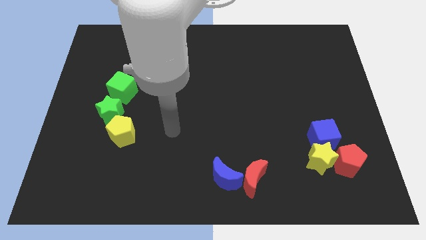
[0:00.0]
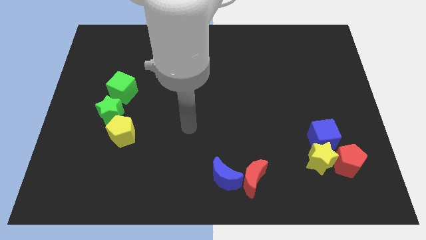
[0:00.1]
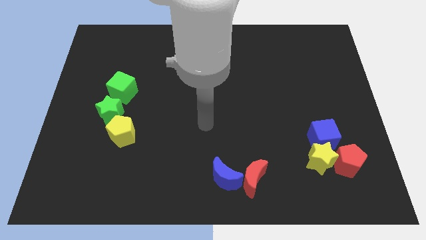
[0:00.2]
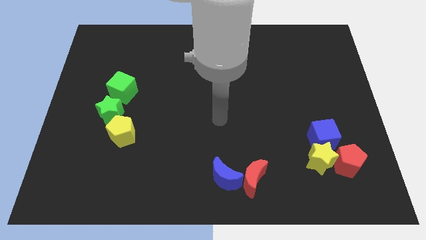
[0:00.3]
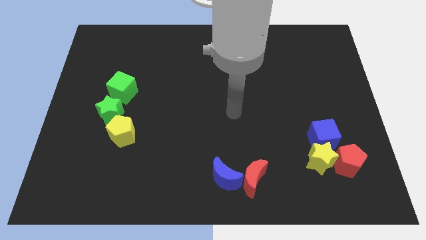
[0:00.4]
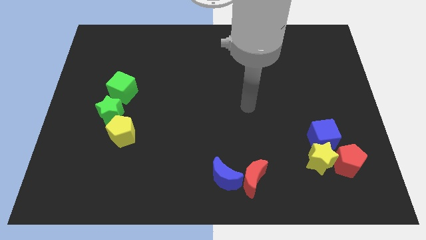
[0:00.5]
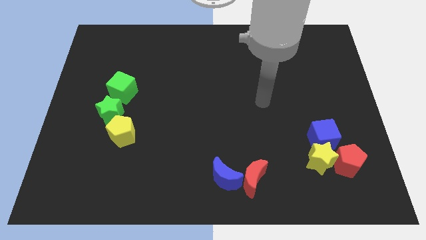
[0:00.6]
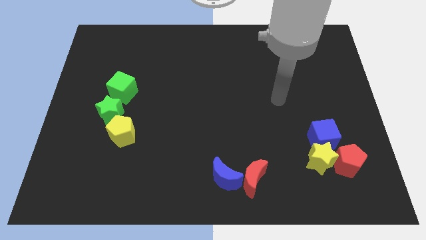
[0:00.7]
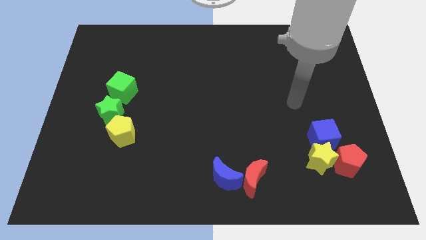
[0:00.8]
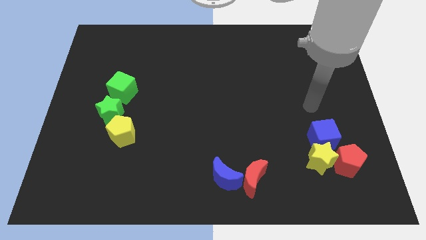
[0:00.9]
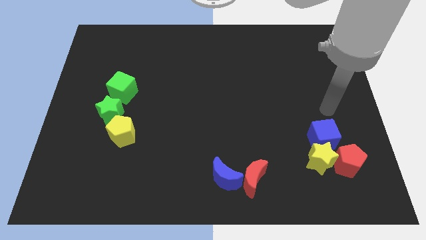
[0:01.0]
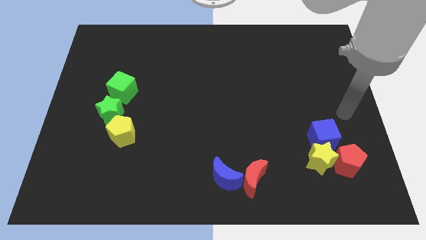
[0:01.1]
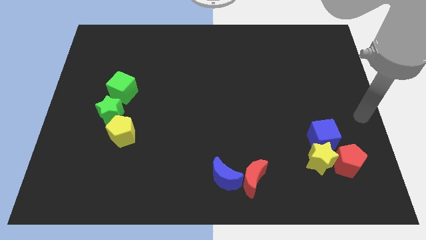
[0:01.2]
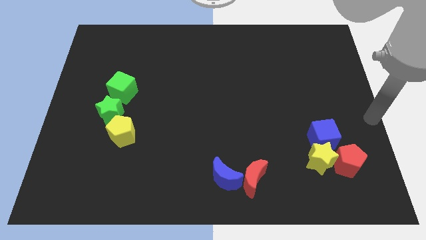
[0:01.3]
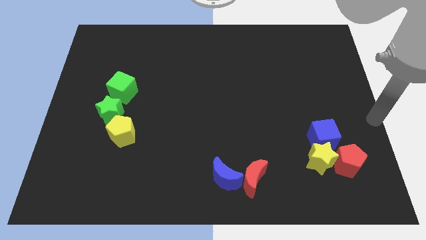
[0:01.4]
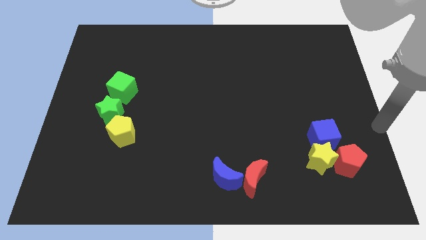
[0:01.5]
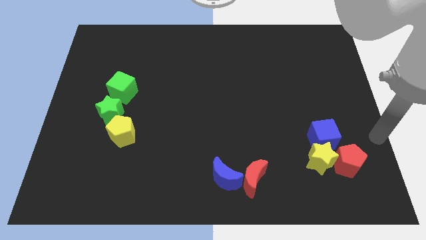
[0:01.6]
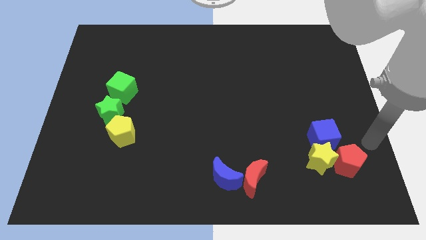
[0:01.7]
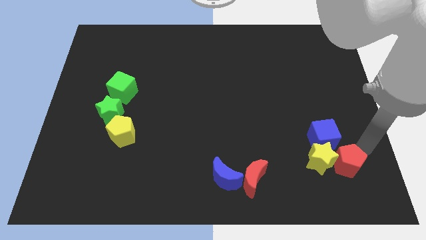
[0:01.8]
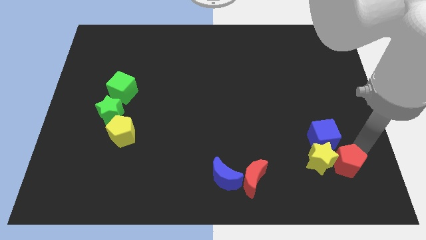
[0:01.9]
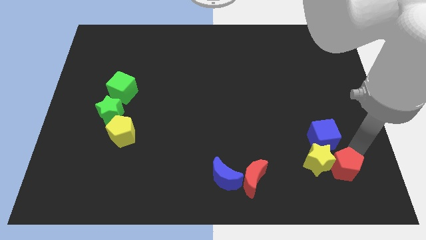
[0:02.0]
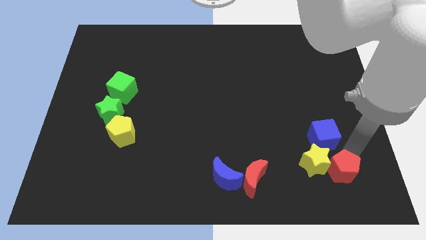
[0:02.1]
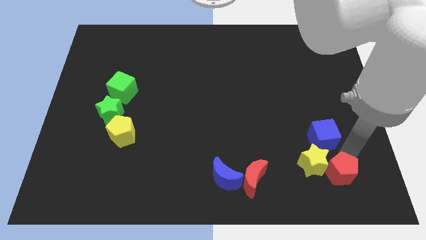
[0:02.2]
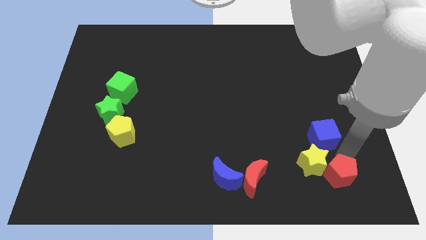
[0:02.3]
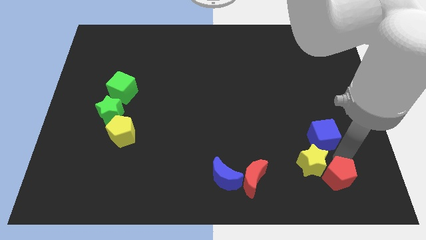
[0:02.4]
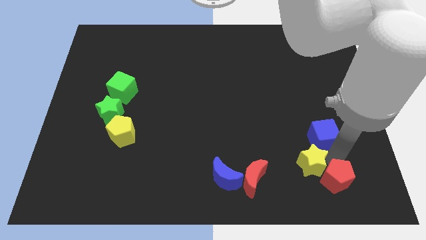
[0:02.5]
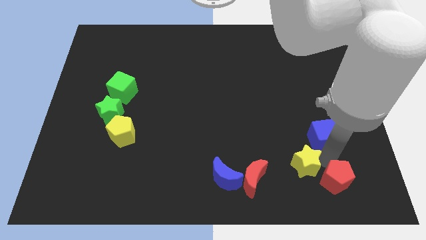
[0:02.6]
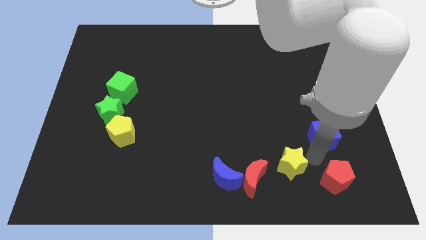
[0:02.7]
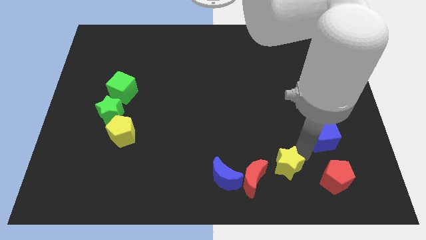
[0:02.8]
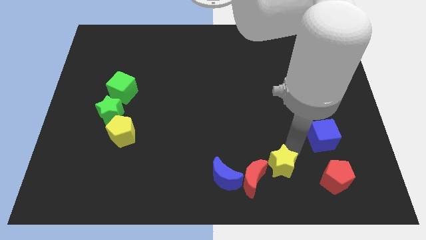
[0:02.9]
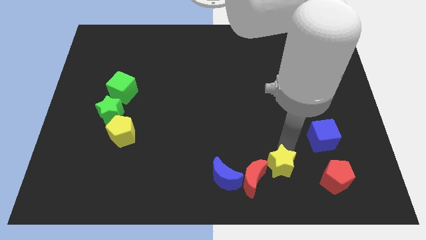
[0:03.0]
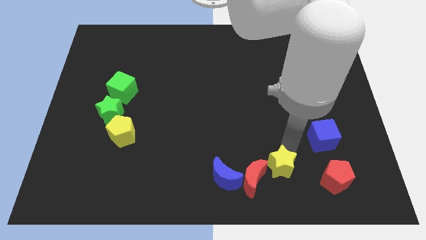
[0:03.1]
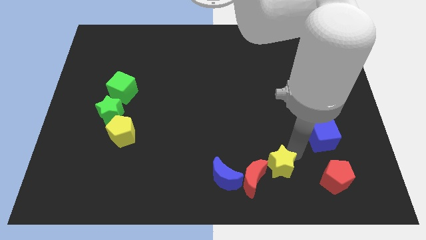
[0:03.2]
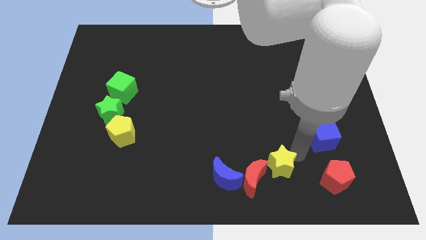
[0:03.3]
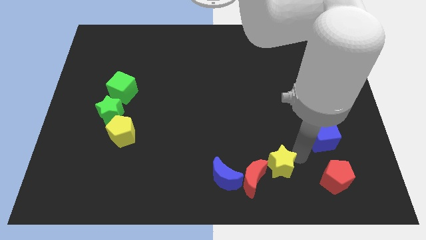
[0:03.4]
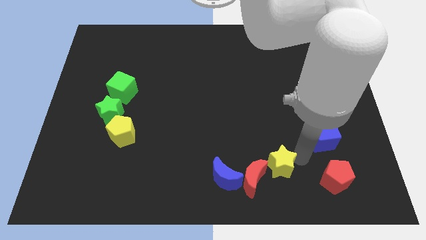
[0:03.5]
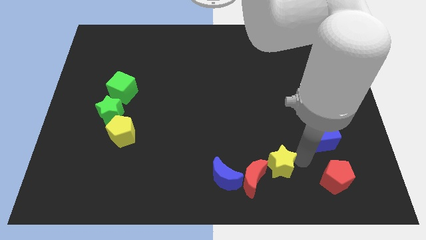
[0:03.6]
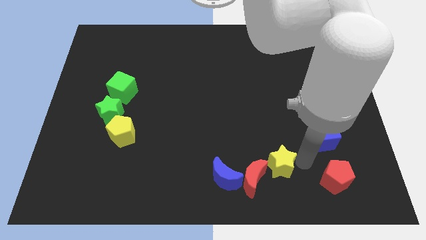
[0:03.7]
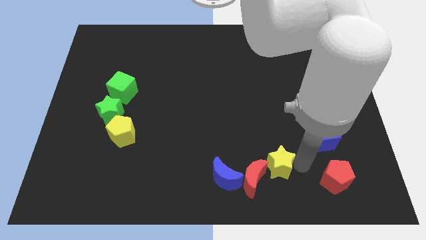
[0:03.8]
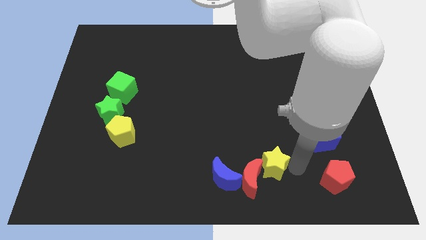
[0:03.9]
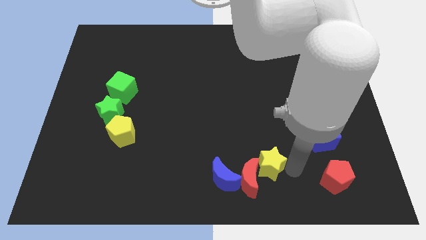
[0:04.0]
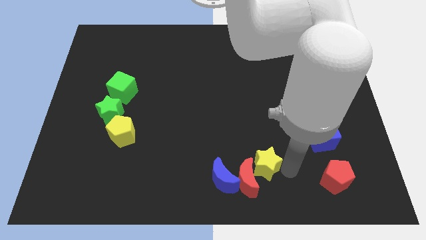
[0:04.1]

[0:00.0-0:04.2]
put the yellow star into the red crescent

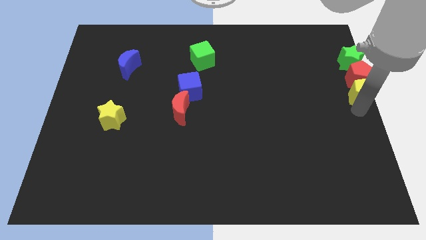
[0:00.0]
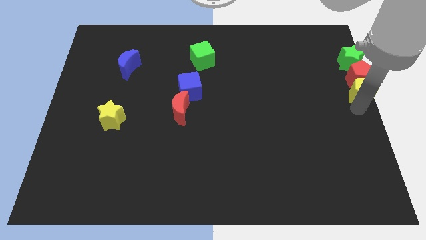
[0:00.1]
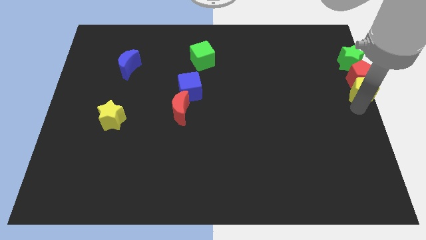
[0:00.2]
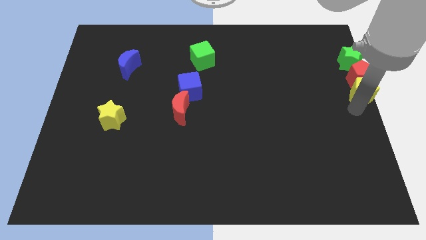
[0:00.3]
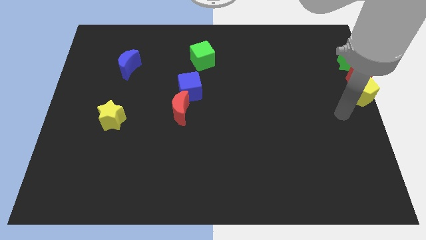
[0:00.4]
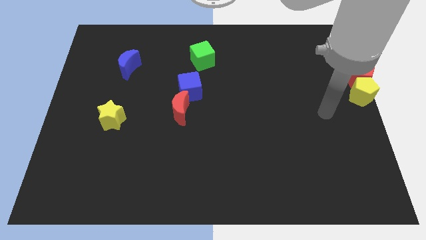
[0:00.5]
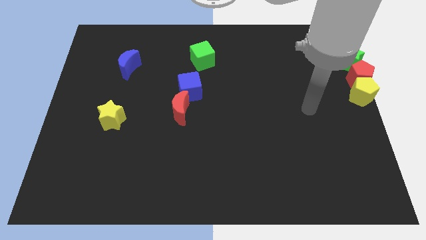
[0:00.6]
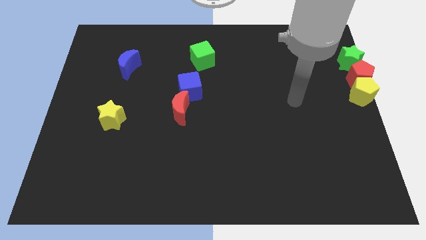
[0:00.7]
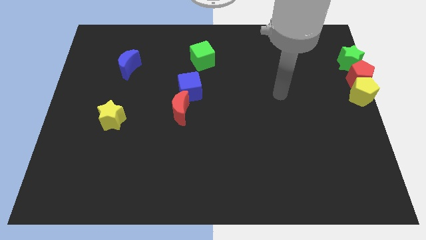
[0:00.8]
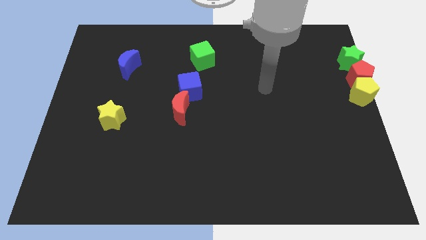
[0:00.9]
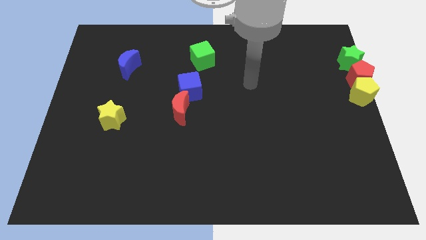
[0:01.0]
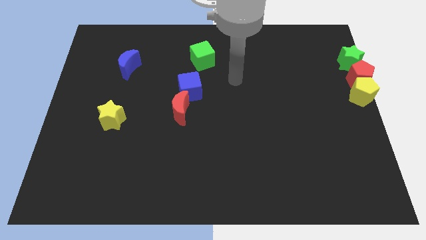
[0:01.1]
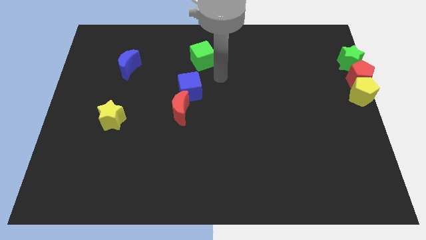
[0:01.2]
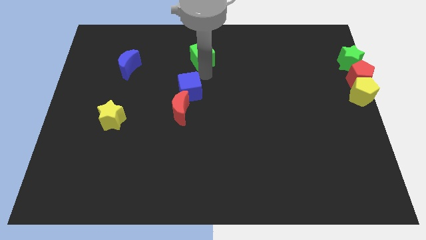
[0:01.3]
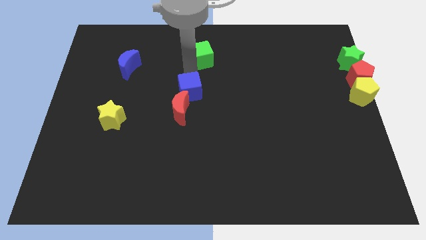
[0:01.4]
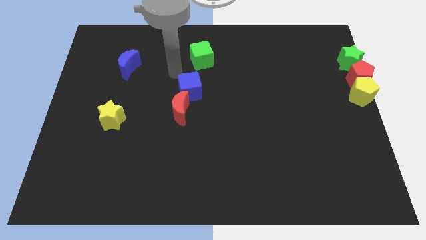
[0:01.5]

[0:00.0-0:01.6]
place the arm diagonally to the blue cube

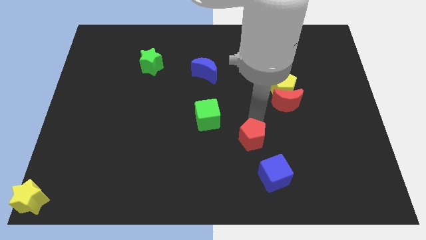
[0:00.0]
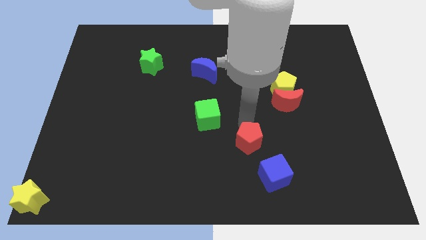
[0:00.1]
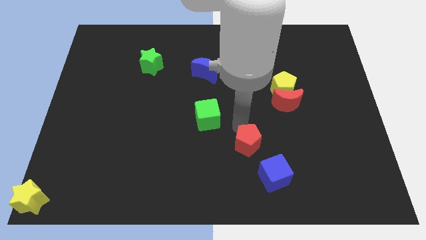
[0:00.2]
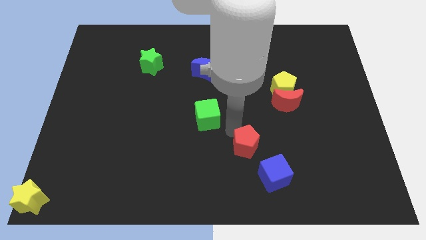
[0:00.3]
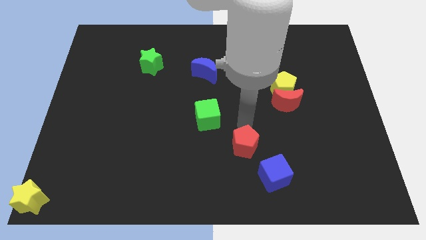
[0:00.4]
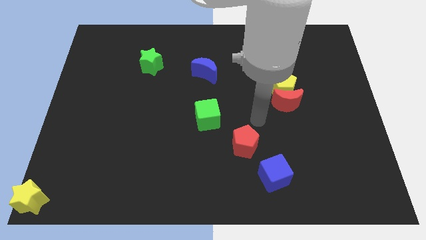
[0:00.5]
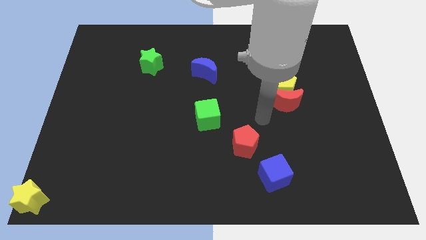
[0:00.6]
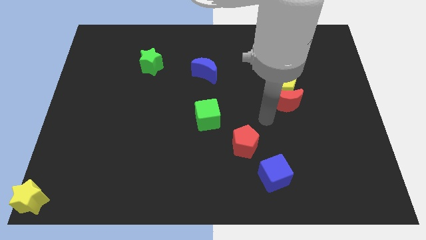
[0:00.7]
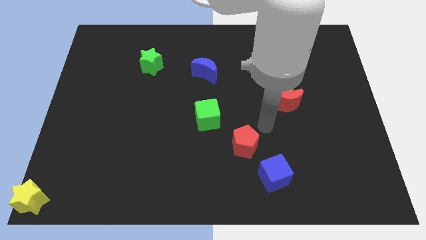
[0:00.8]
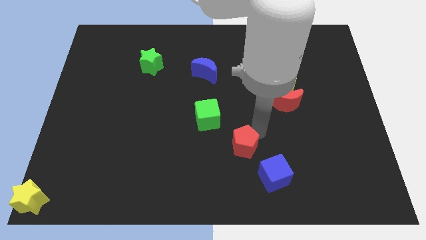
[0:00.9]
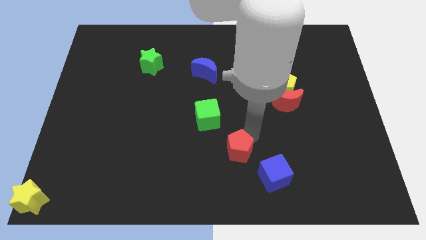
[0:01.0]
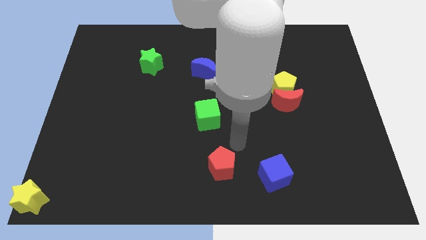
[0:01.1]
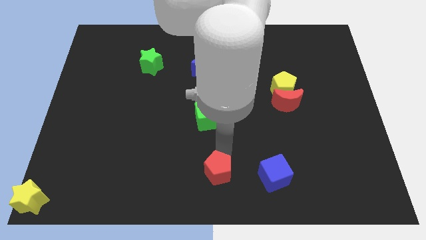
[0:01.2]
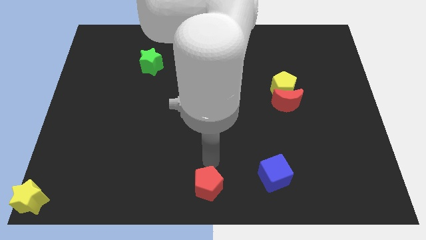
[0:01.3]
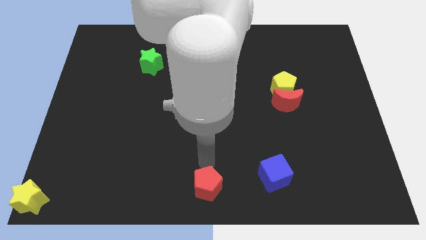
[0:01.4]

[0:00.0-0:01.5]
place the red pentagon to the left of the blue cube

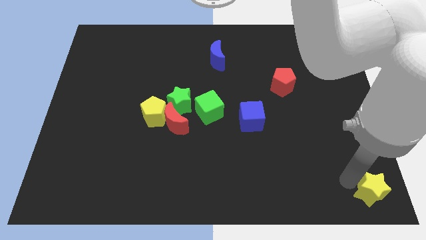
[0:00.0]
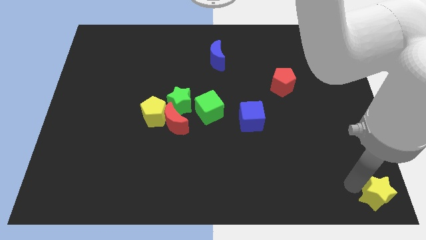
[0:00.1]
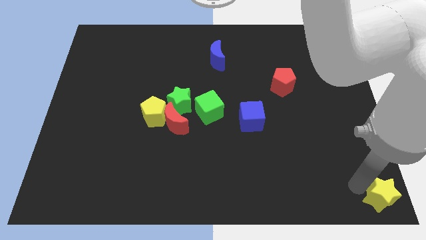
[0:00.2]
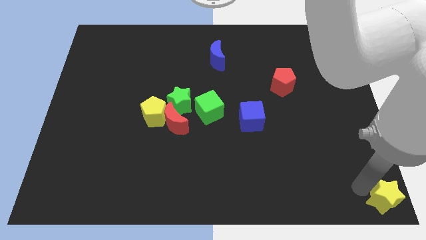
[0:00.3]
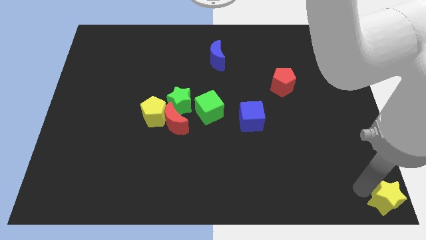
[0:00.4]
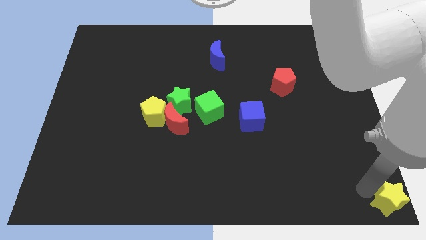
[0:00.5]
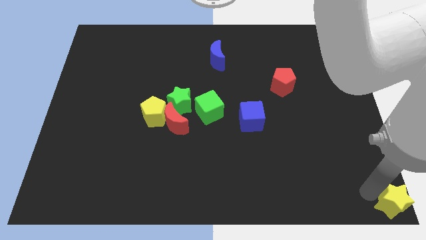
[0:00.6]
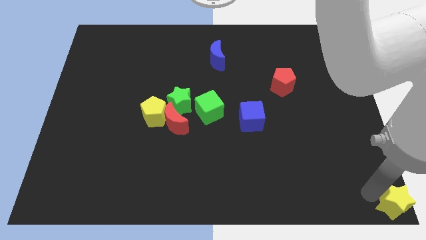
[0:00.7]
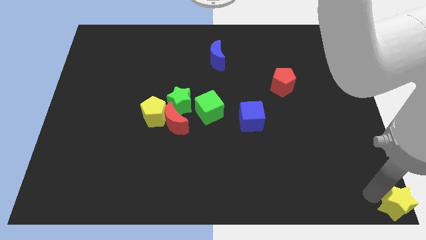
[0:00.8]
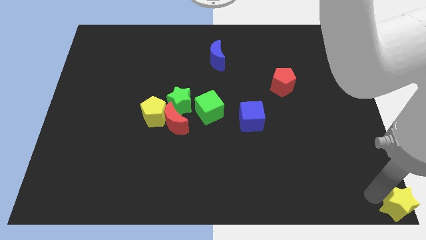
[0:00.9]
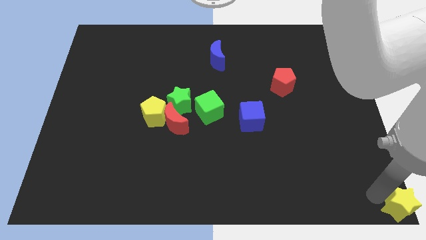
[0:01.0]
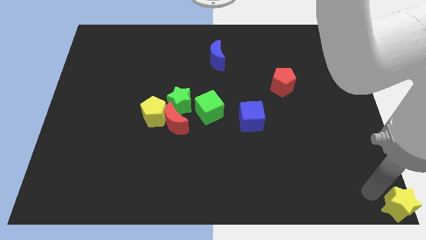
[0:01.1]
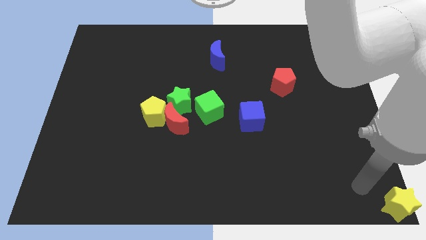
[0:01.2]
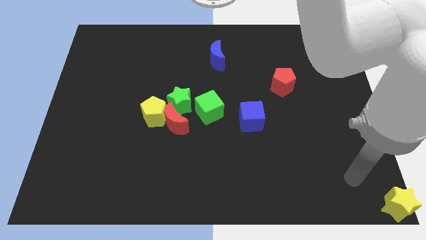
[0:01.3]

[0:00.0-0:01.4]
place the yellow star towards the bottom right corner of the board
